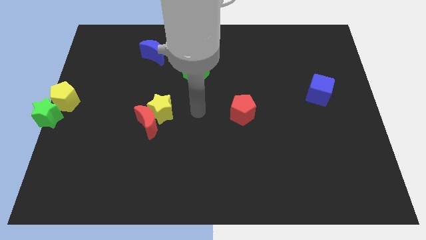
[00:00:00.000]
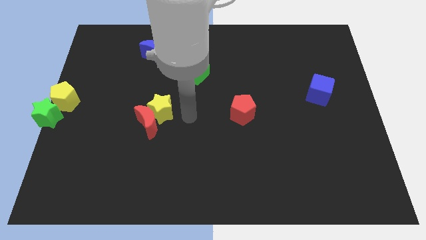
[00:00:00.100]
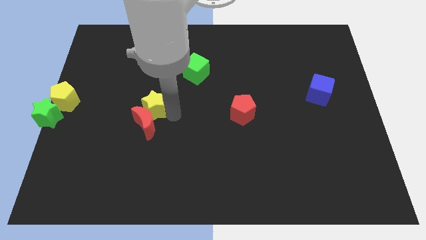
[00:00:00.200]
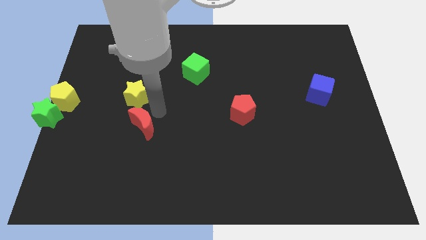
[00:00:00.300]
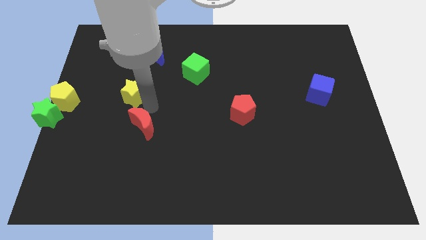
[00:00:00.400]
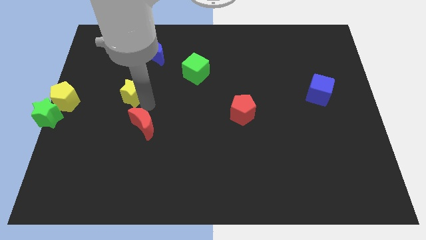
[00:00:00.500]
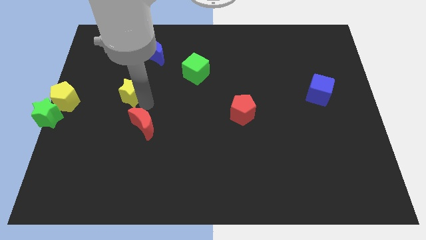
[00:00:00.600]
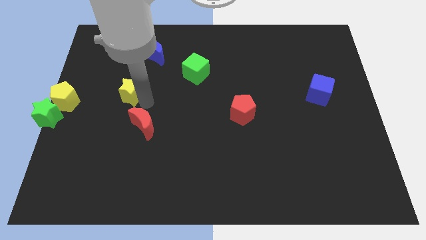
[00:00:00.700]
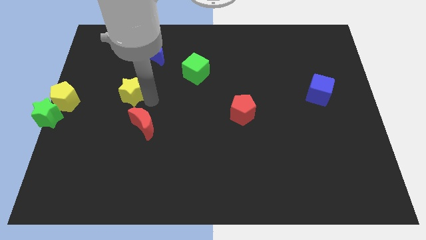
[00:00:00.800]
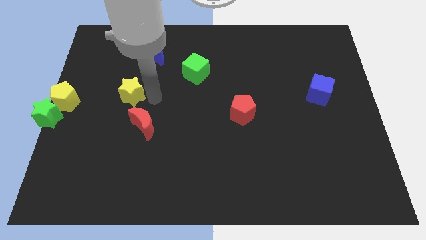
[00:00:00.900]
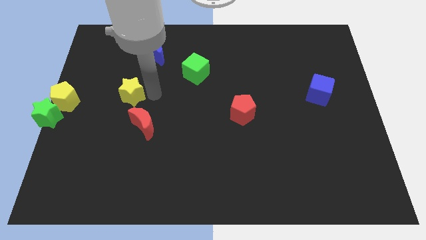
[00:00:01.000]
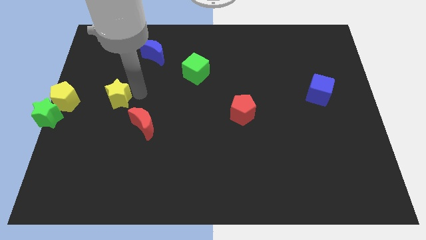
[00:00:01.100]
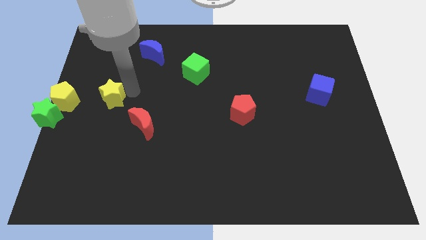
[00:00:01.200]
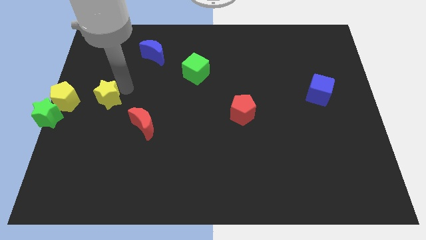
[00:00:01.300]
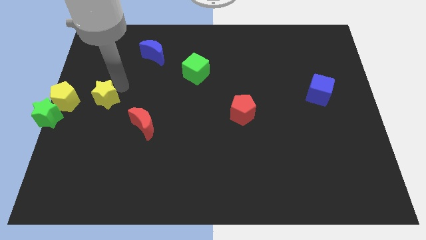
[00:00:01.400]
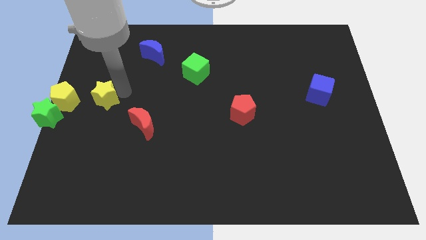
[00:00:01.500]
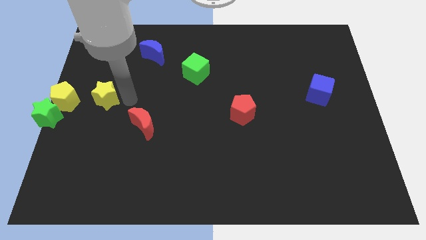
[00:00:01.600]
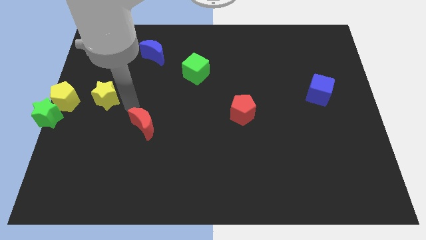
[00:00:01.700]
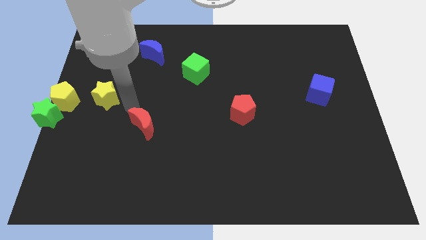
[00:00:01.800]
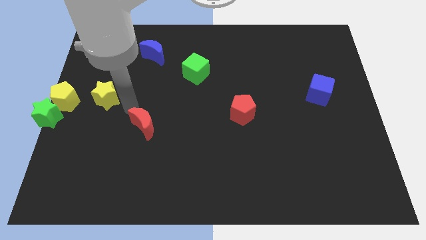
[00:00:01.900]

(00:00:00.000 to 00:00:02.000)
separate the yellow star from the red crescent

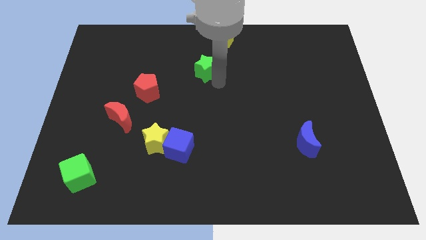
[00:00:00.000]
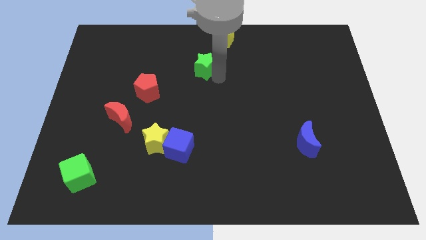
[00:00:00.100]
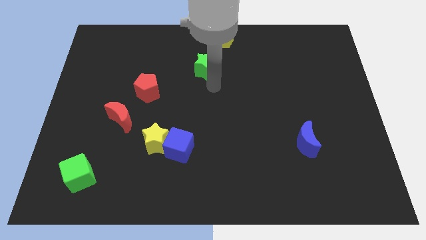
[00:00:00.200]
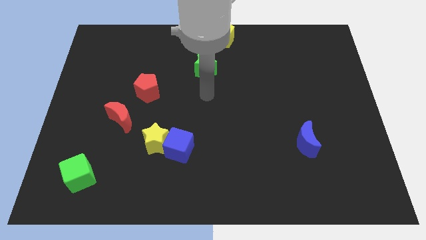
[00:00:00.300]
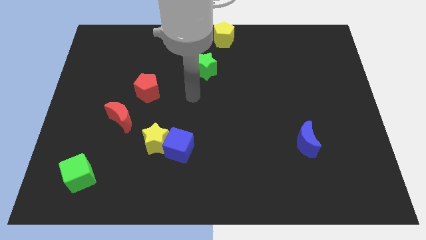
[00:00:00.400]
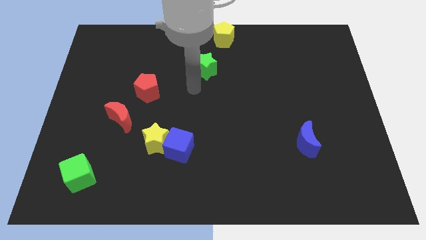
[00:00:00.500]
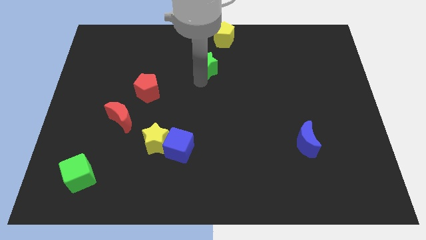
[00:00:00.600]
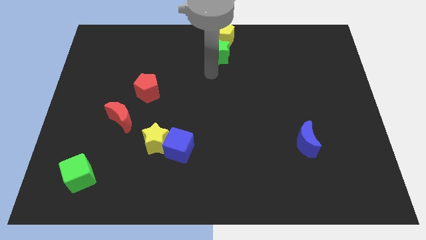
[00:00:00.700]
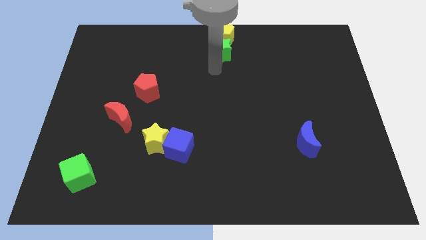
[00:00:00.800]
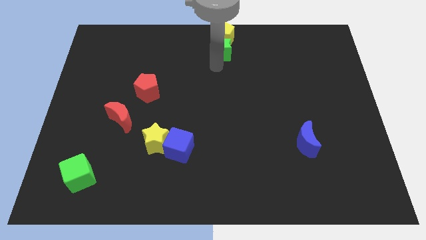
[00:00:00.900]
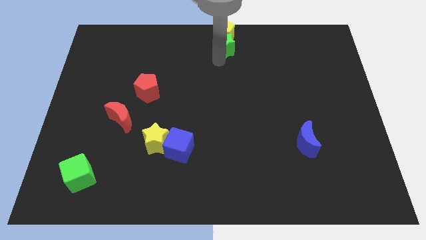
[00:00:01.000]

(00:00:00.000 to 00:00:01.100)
push the green star into the yellow pentagon

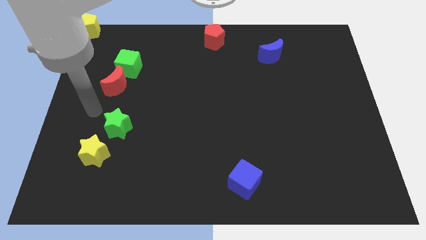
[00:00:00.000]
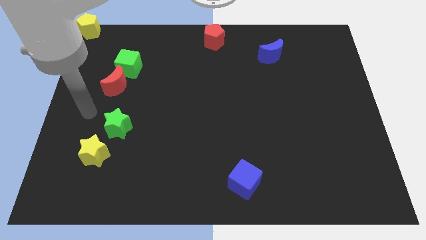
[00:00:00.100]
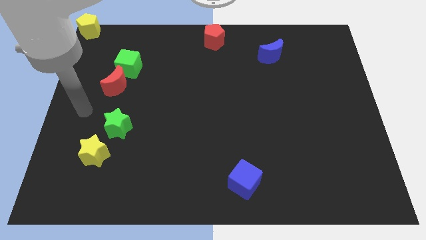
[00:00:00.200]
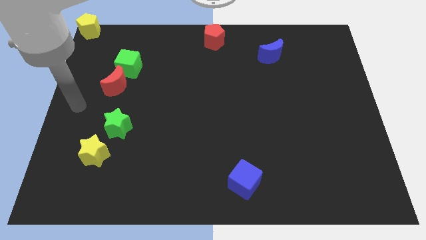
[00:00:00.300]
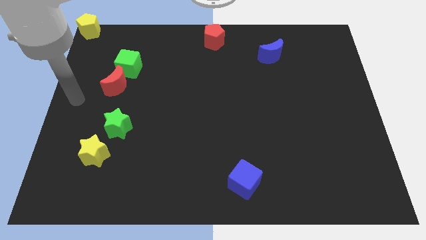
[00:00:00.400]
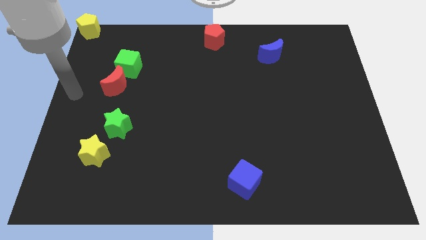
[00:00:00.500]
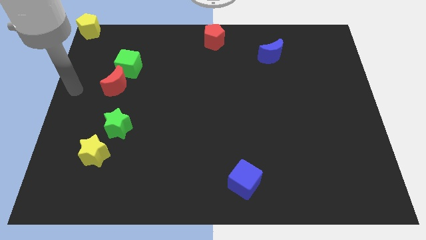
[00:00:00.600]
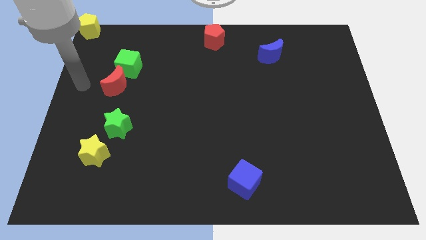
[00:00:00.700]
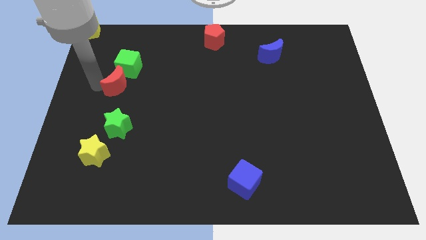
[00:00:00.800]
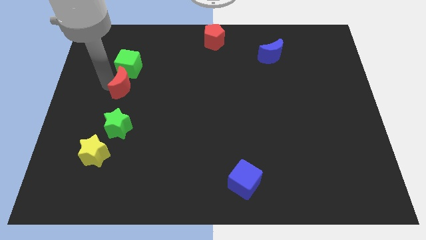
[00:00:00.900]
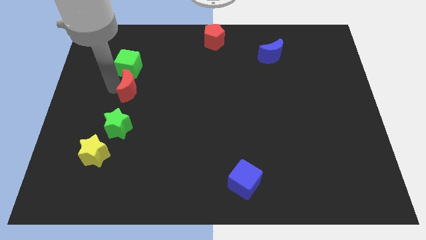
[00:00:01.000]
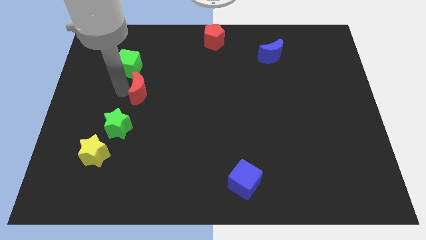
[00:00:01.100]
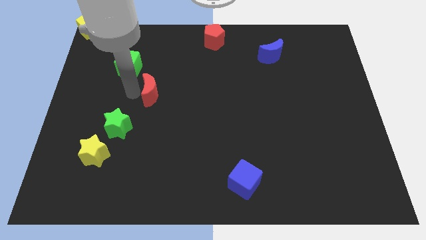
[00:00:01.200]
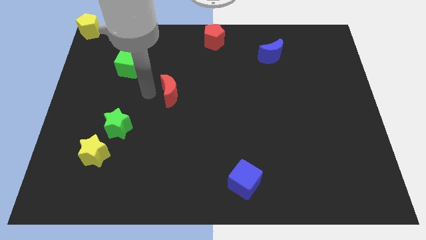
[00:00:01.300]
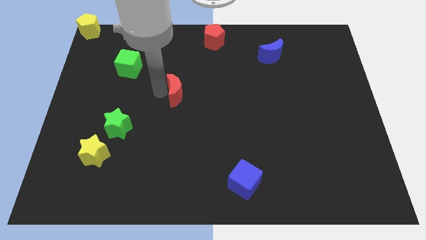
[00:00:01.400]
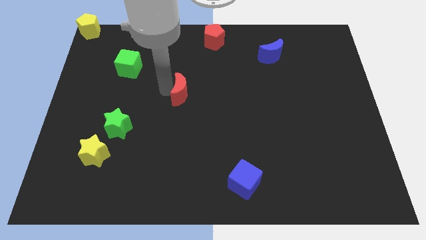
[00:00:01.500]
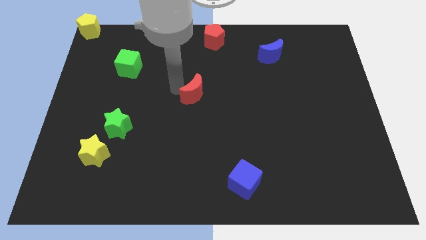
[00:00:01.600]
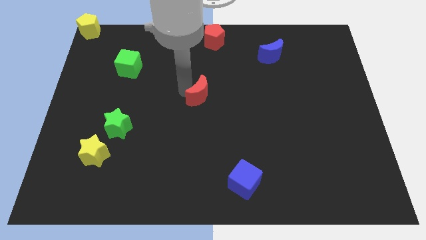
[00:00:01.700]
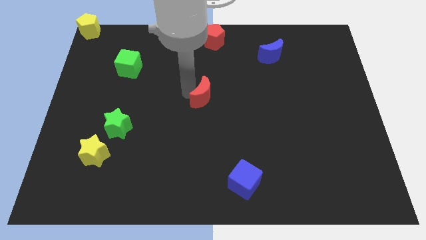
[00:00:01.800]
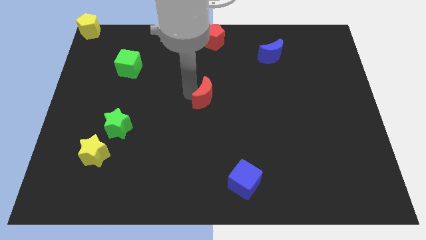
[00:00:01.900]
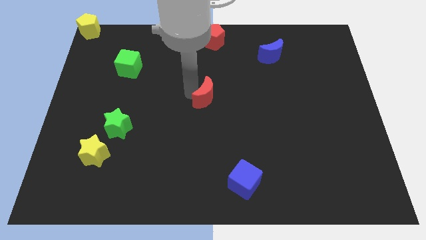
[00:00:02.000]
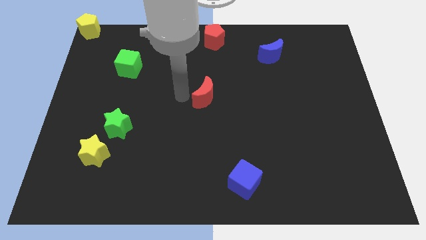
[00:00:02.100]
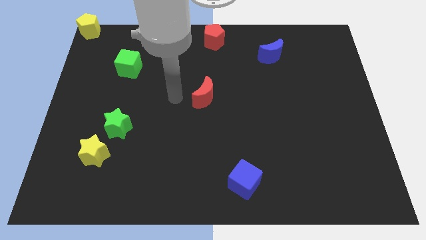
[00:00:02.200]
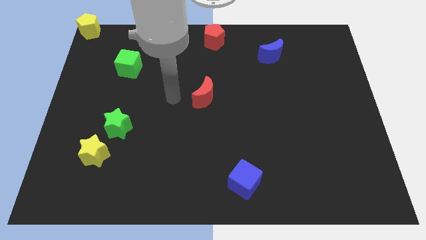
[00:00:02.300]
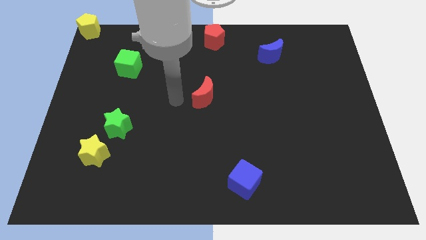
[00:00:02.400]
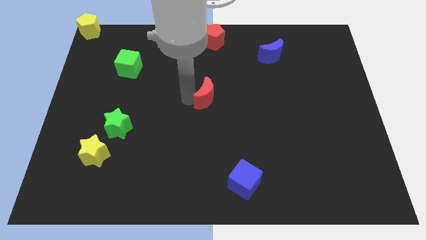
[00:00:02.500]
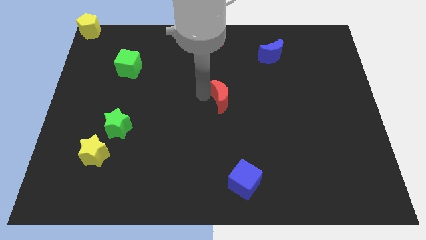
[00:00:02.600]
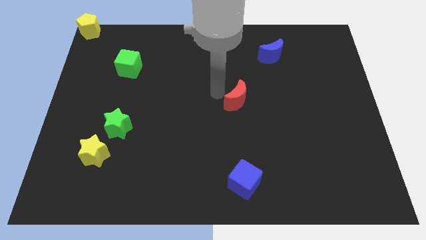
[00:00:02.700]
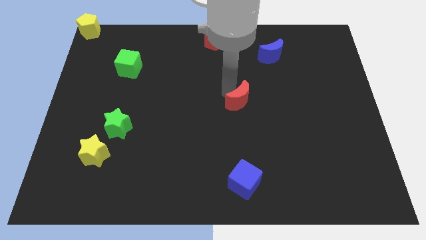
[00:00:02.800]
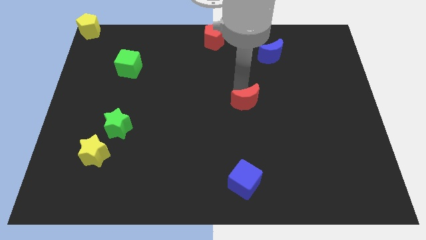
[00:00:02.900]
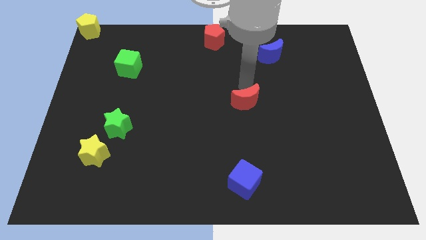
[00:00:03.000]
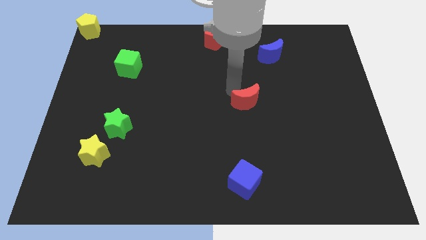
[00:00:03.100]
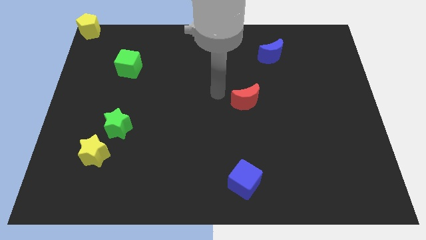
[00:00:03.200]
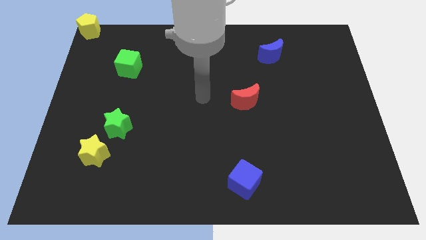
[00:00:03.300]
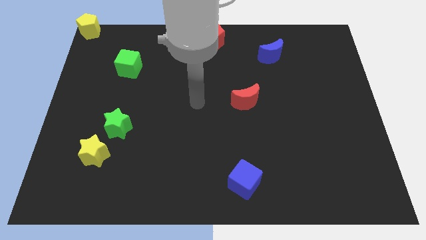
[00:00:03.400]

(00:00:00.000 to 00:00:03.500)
push the red moon to the center

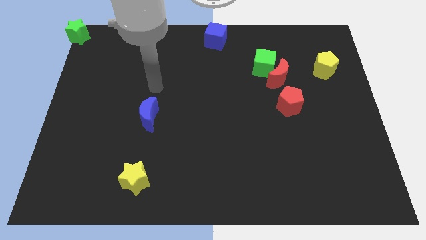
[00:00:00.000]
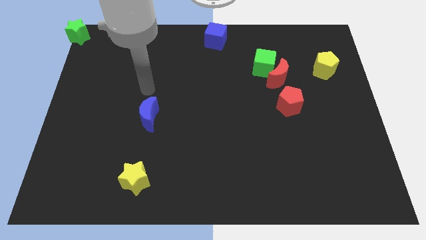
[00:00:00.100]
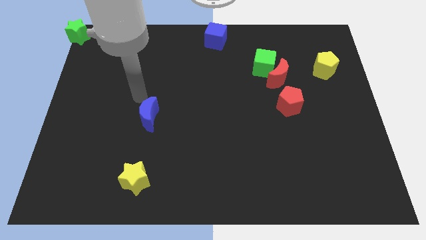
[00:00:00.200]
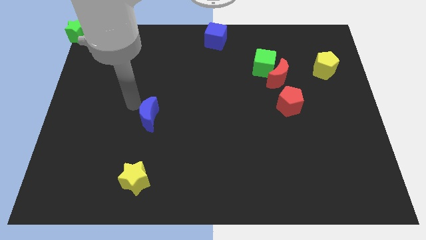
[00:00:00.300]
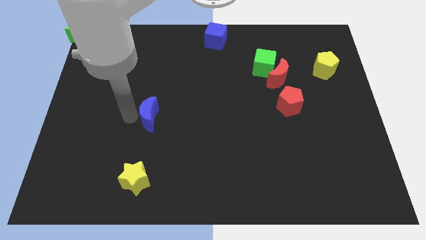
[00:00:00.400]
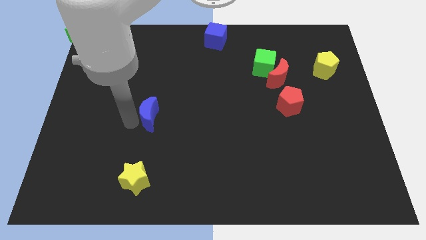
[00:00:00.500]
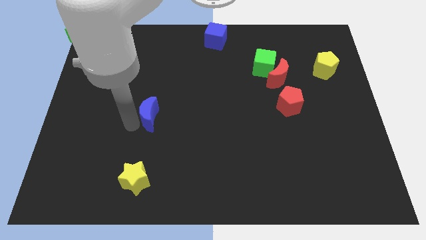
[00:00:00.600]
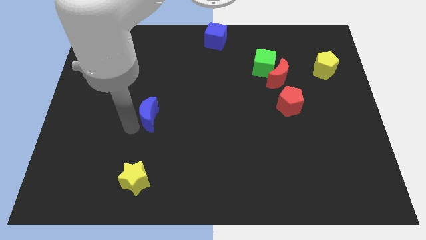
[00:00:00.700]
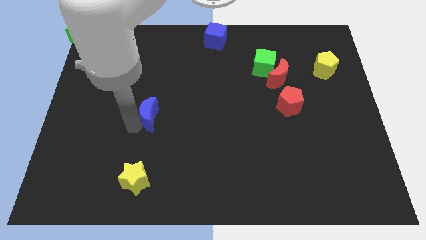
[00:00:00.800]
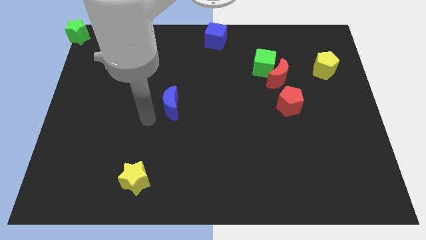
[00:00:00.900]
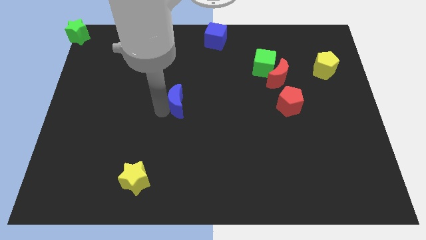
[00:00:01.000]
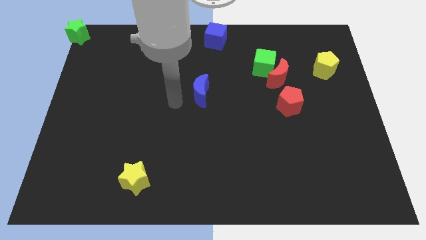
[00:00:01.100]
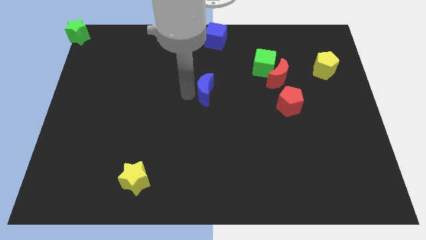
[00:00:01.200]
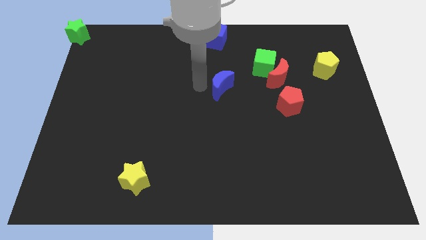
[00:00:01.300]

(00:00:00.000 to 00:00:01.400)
move the blue crescent to the bottom of the blue cube

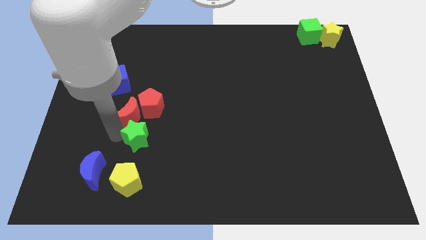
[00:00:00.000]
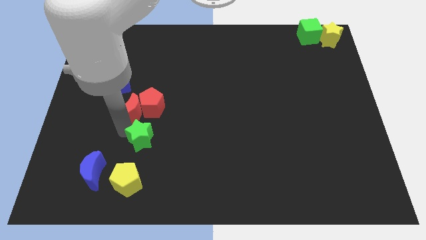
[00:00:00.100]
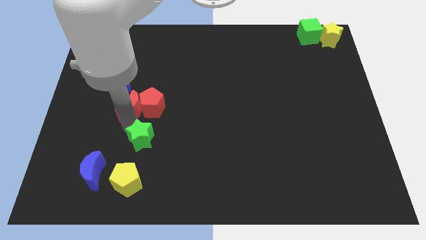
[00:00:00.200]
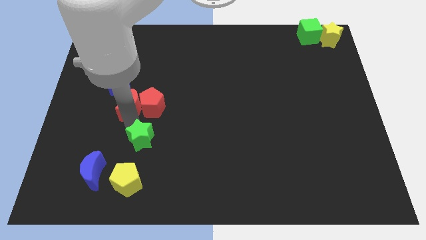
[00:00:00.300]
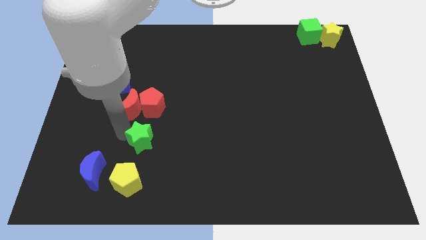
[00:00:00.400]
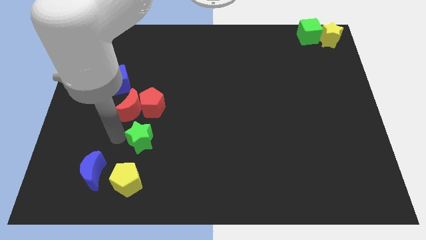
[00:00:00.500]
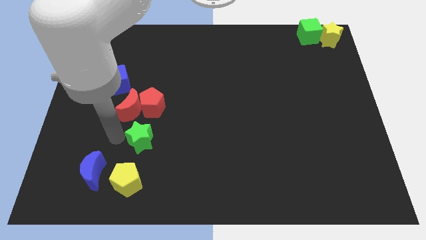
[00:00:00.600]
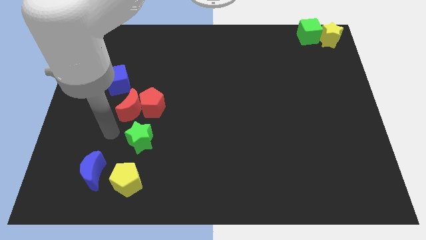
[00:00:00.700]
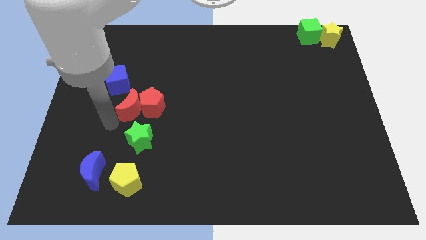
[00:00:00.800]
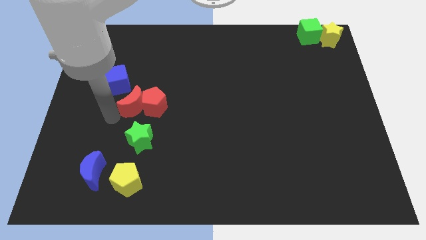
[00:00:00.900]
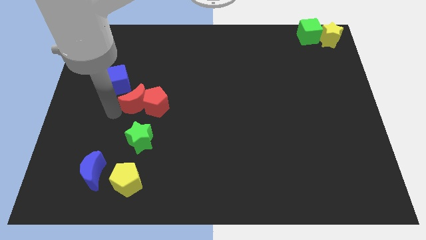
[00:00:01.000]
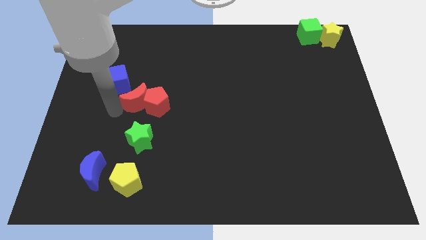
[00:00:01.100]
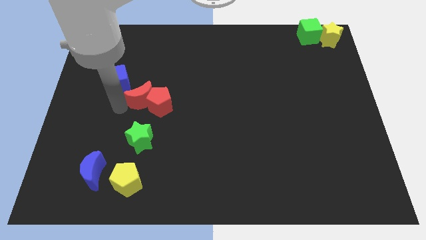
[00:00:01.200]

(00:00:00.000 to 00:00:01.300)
adjust the red moon to the center of the blue cube and red pentagon
